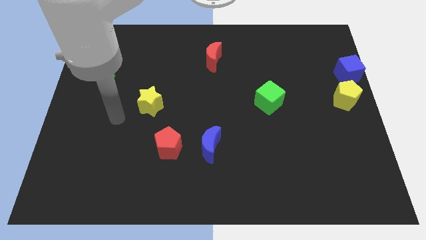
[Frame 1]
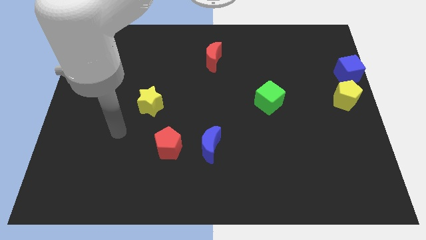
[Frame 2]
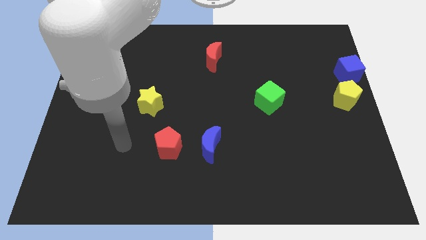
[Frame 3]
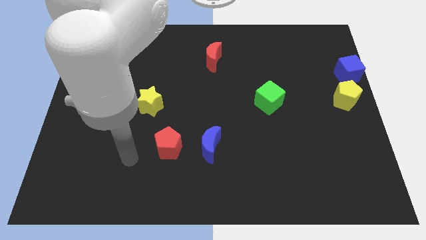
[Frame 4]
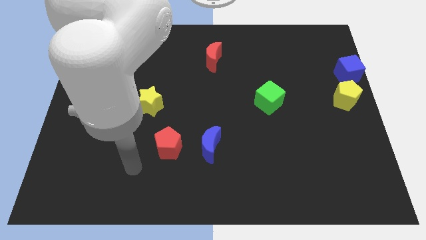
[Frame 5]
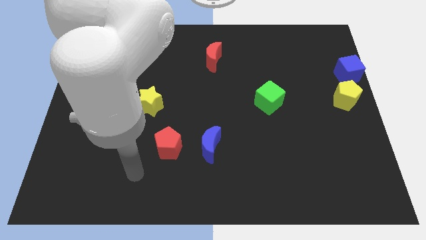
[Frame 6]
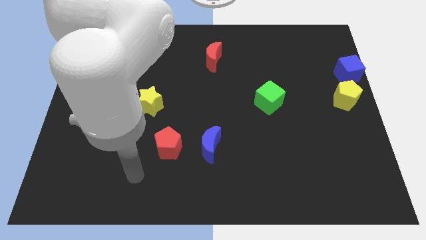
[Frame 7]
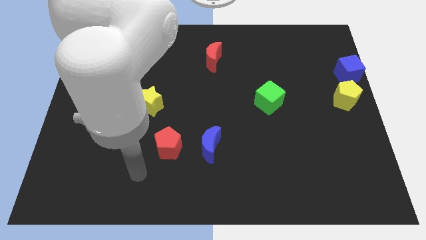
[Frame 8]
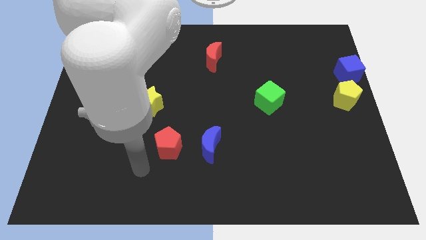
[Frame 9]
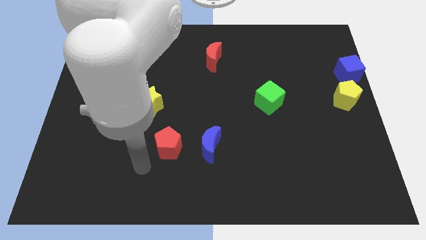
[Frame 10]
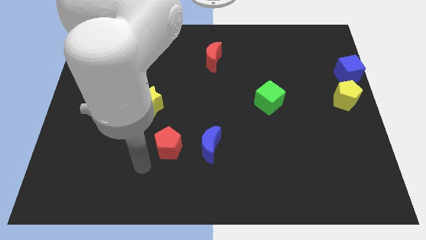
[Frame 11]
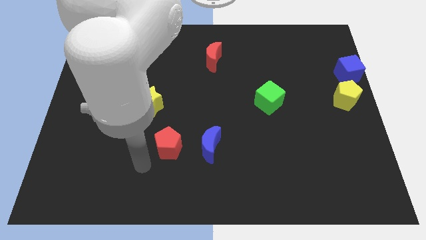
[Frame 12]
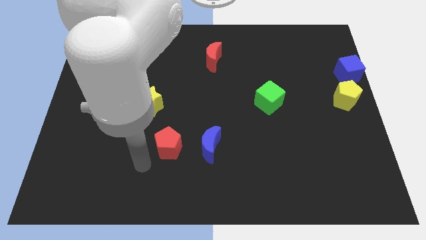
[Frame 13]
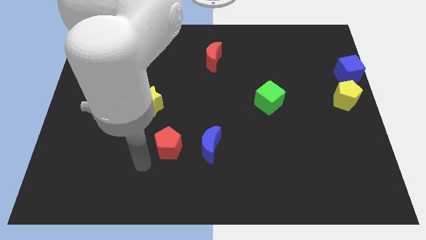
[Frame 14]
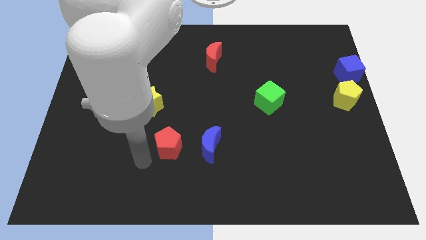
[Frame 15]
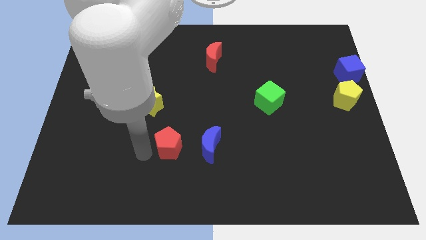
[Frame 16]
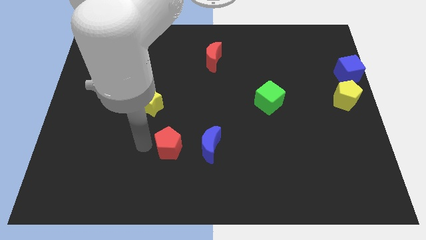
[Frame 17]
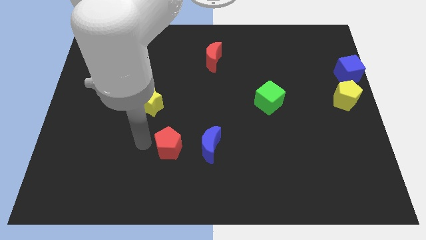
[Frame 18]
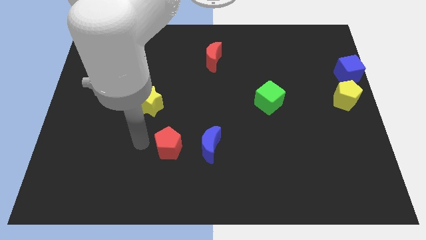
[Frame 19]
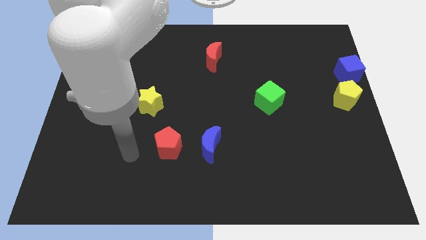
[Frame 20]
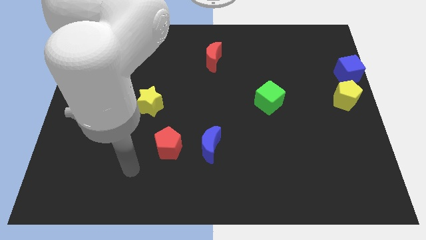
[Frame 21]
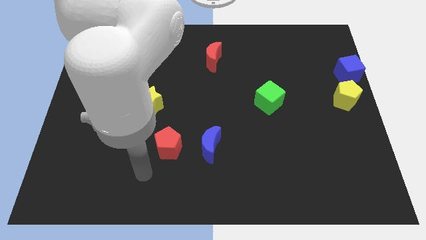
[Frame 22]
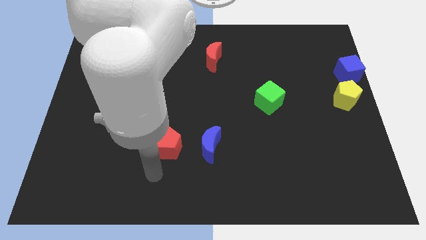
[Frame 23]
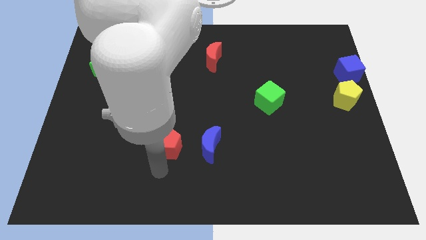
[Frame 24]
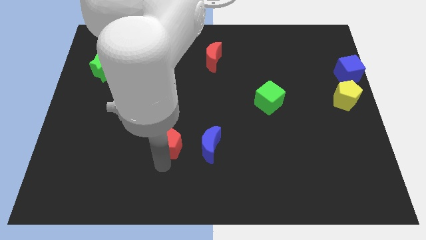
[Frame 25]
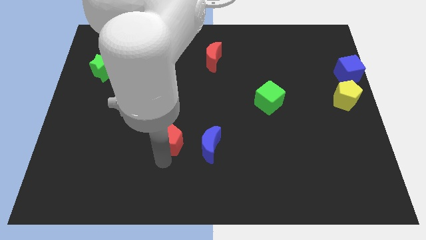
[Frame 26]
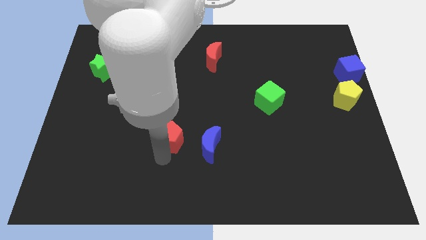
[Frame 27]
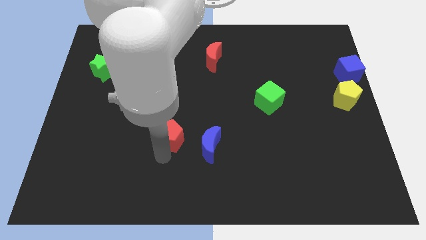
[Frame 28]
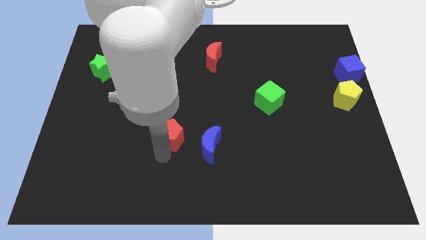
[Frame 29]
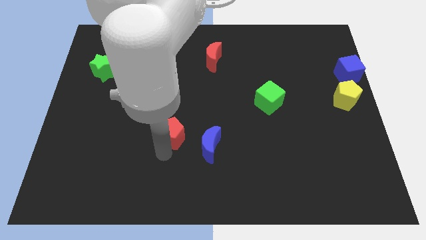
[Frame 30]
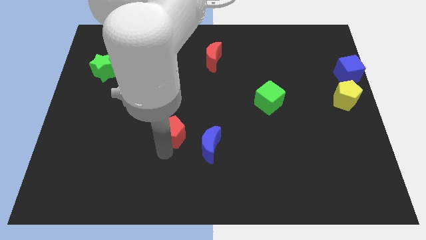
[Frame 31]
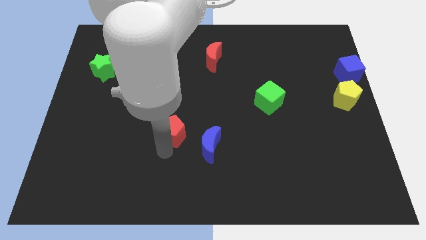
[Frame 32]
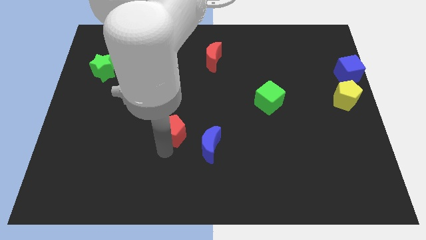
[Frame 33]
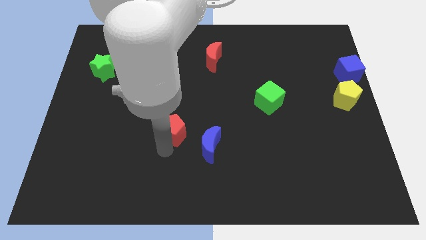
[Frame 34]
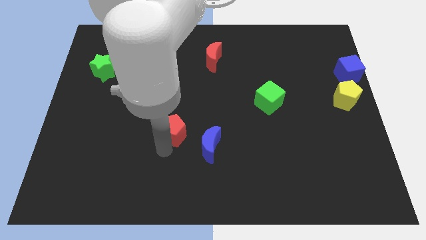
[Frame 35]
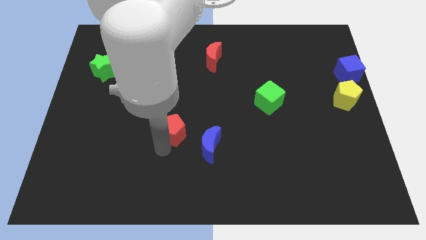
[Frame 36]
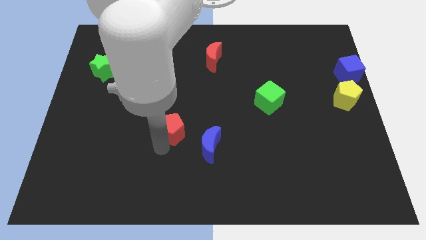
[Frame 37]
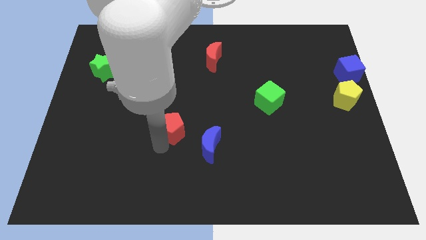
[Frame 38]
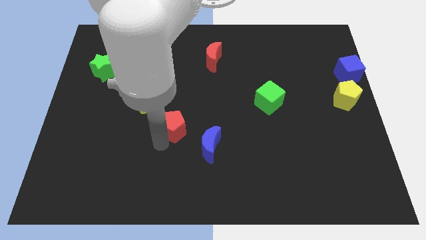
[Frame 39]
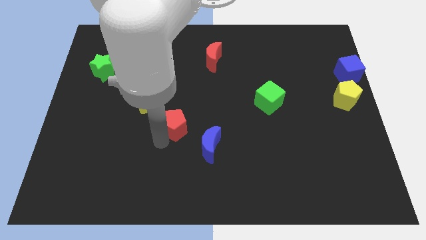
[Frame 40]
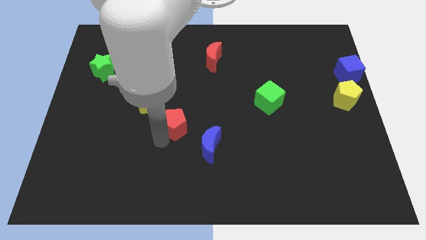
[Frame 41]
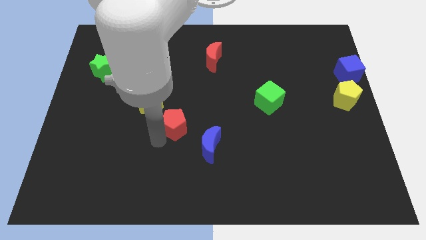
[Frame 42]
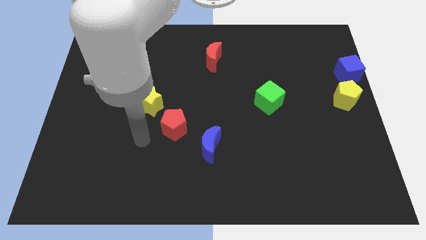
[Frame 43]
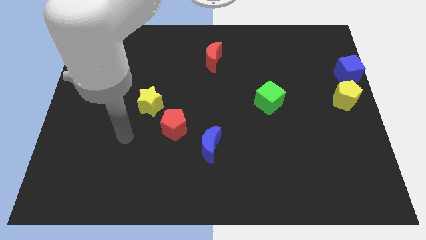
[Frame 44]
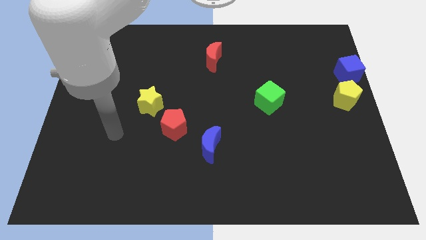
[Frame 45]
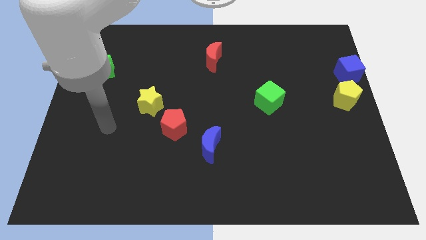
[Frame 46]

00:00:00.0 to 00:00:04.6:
move the red pentagon to the bottom right of the yellow star

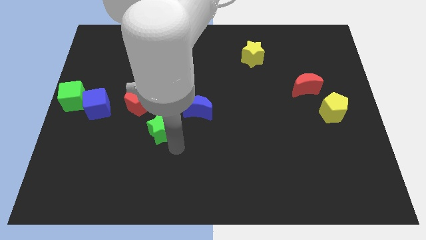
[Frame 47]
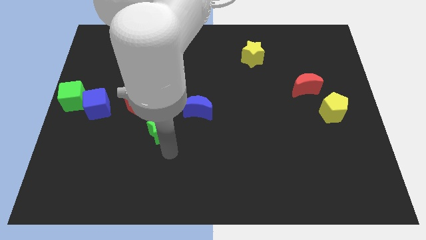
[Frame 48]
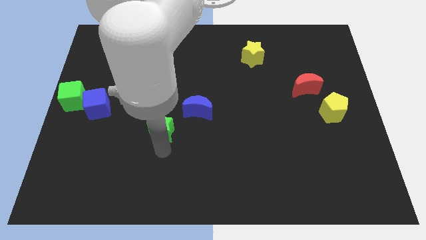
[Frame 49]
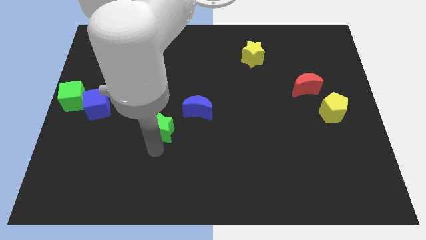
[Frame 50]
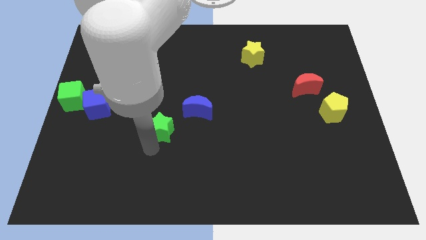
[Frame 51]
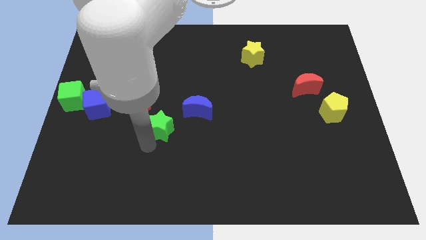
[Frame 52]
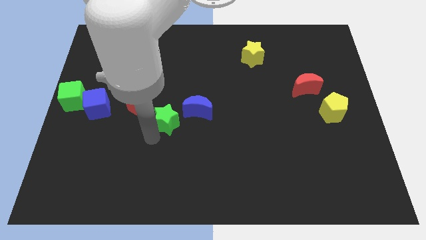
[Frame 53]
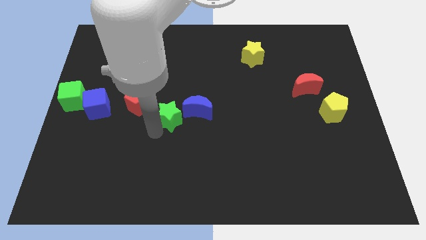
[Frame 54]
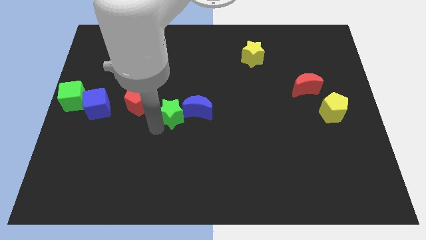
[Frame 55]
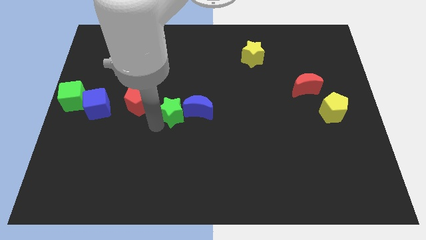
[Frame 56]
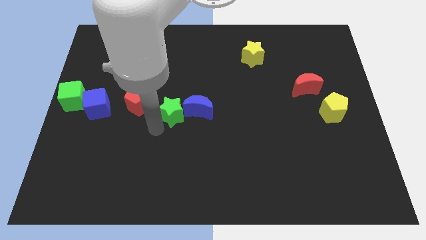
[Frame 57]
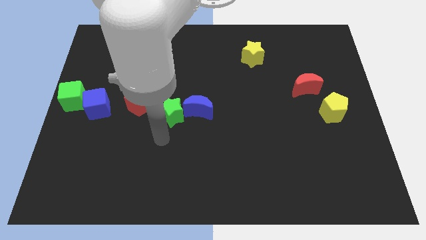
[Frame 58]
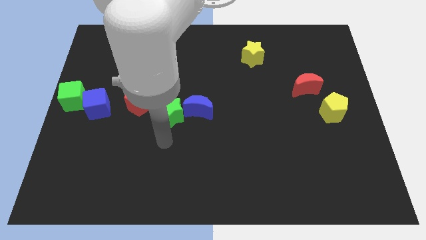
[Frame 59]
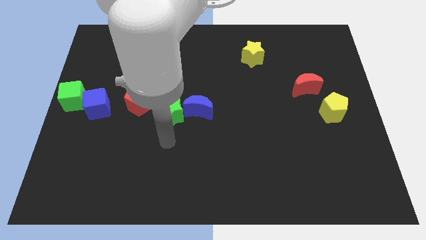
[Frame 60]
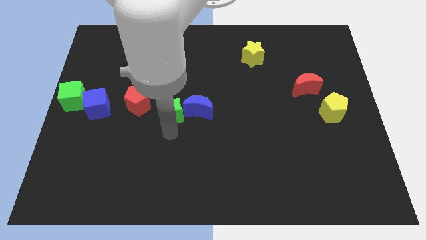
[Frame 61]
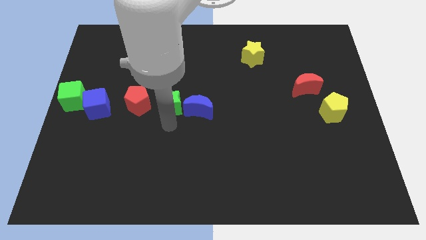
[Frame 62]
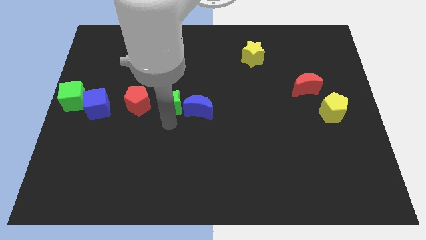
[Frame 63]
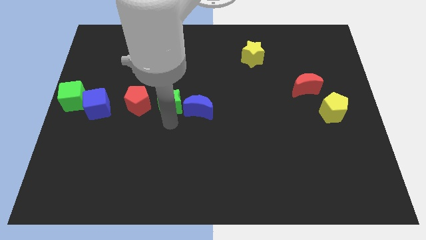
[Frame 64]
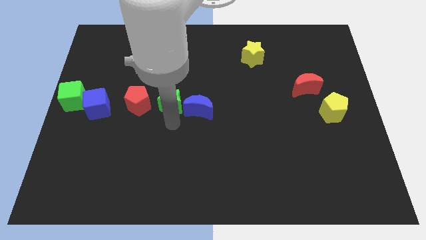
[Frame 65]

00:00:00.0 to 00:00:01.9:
place the green star in between the red pentagon and blue moon

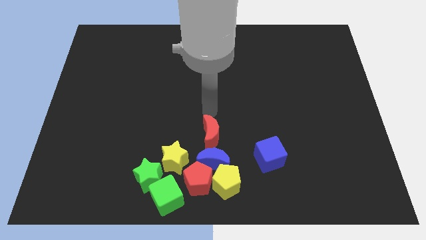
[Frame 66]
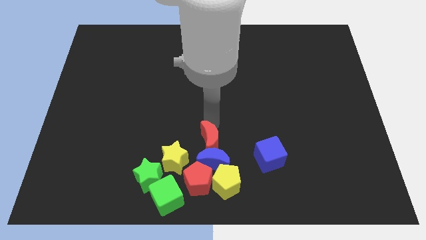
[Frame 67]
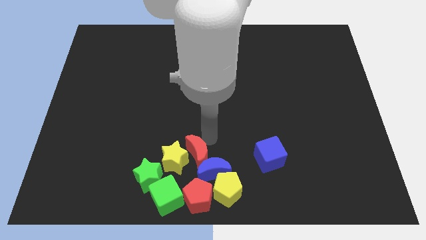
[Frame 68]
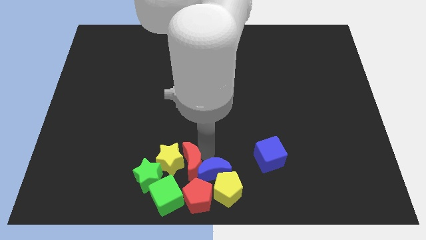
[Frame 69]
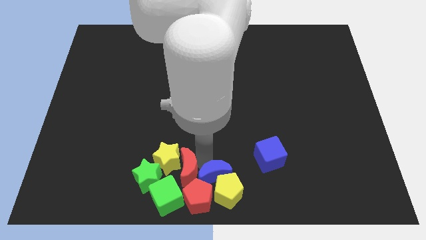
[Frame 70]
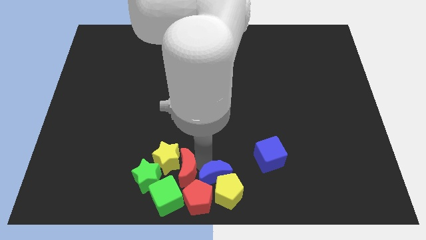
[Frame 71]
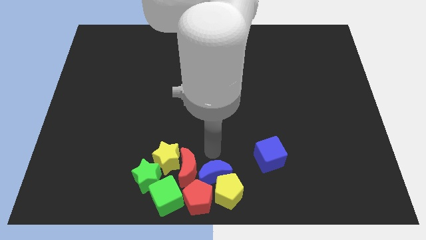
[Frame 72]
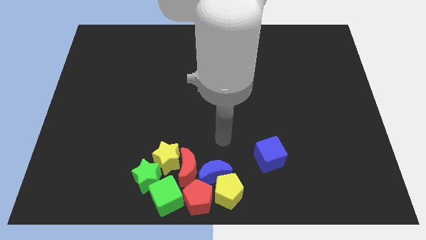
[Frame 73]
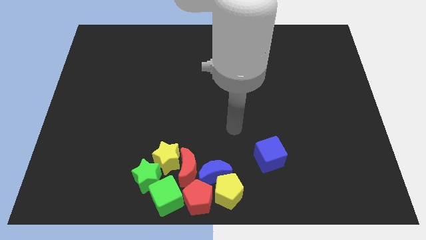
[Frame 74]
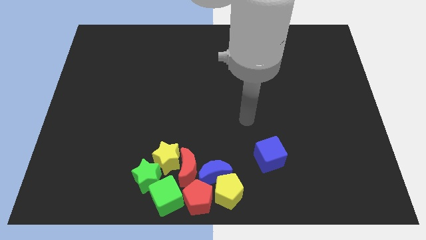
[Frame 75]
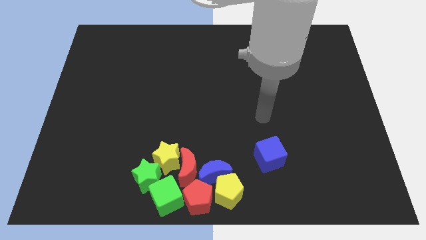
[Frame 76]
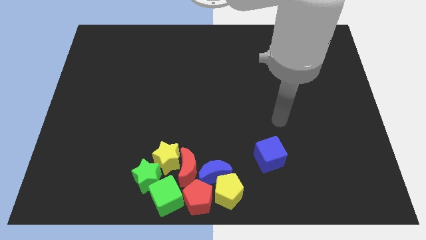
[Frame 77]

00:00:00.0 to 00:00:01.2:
move the red crescent into the group of blocks

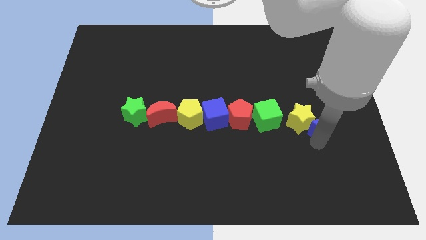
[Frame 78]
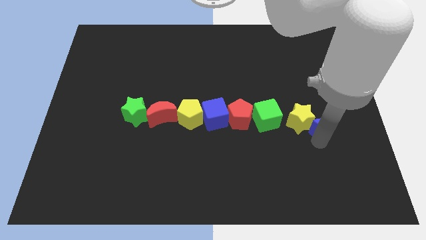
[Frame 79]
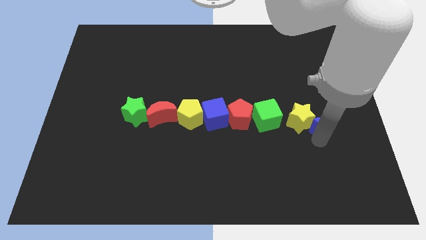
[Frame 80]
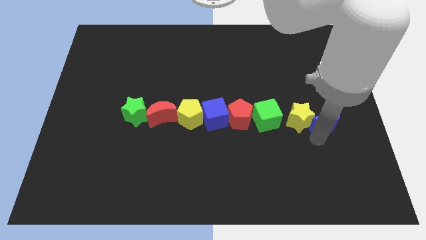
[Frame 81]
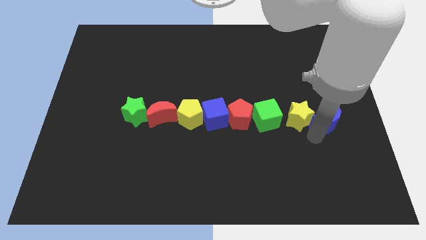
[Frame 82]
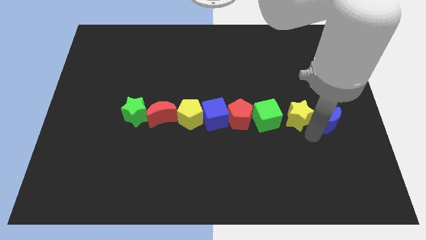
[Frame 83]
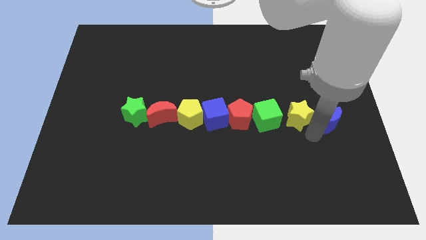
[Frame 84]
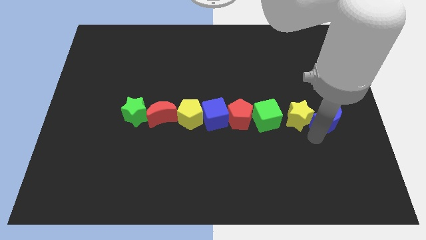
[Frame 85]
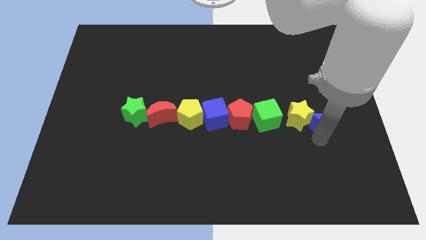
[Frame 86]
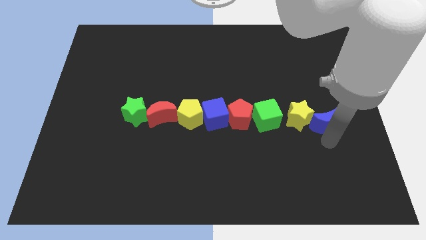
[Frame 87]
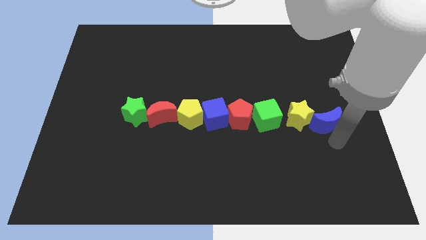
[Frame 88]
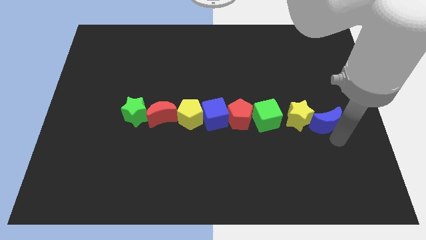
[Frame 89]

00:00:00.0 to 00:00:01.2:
push the blue crescent to the right of the yellow star
